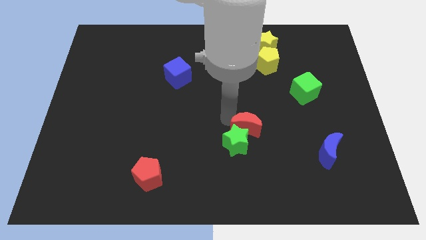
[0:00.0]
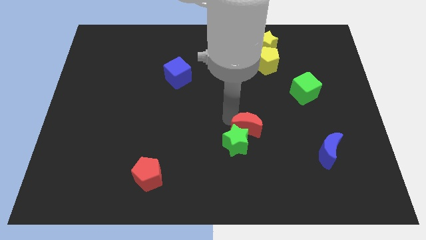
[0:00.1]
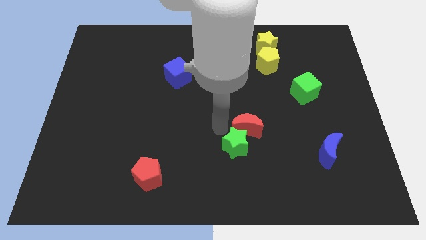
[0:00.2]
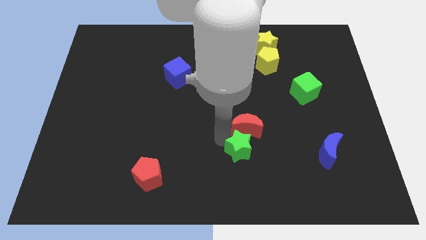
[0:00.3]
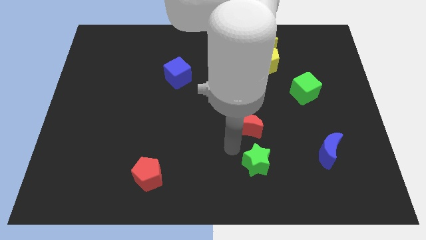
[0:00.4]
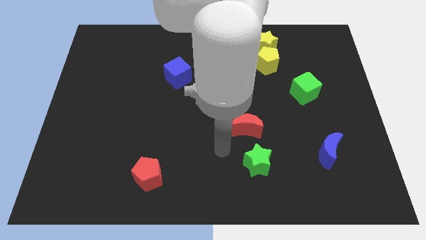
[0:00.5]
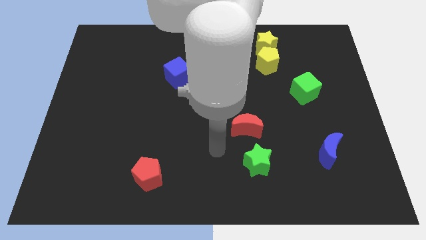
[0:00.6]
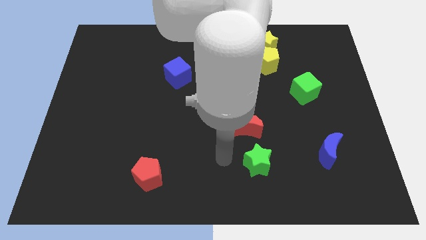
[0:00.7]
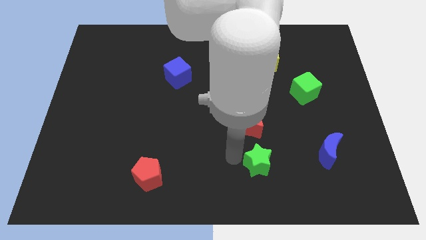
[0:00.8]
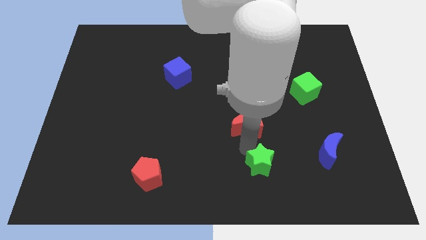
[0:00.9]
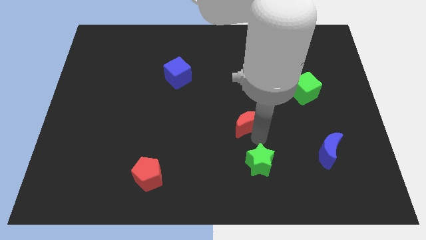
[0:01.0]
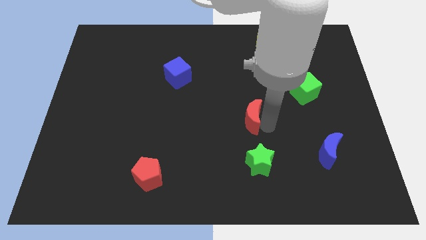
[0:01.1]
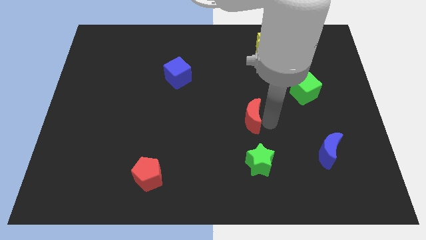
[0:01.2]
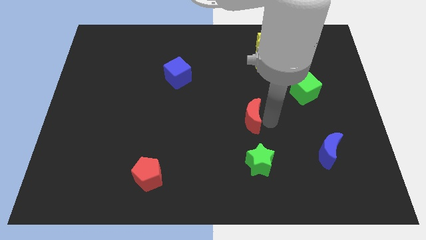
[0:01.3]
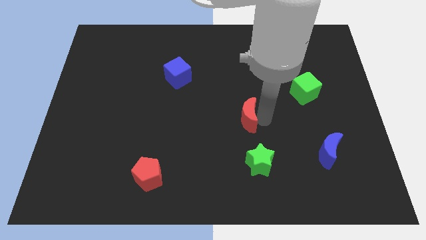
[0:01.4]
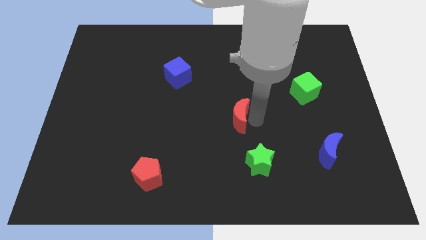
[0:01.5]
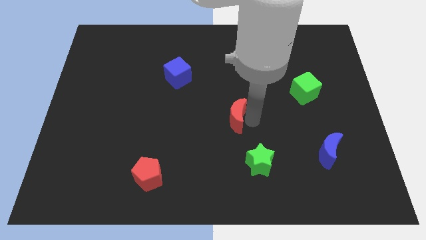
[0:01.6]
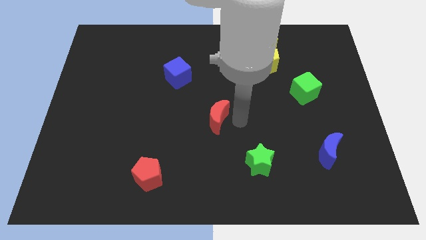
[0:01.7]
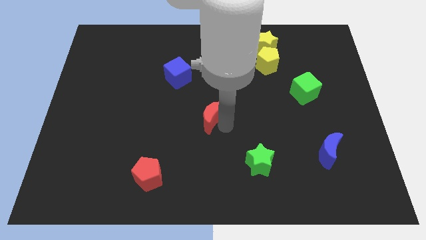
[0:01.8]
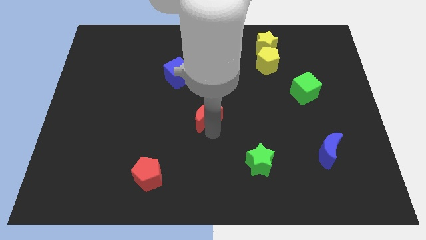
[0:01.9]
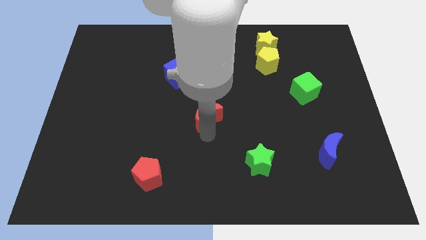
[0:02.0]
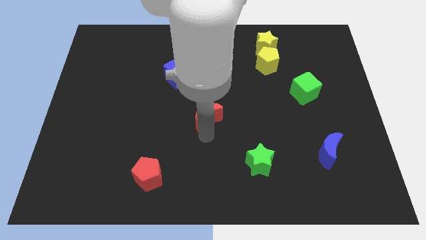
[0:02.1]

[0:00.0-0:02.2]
move red moon slightly left

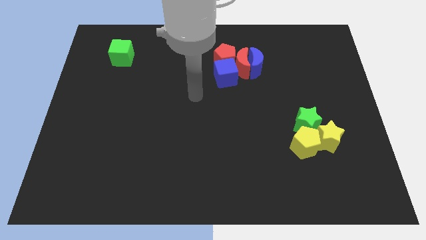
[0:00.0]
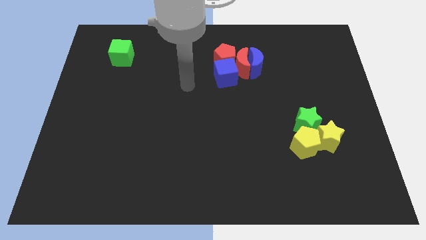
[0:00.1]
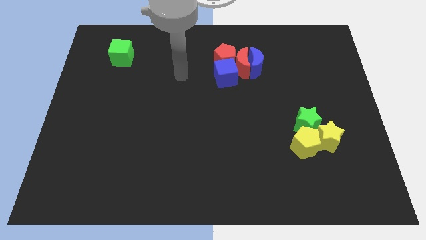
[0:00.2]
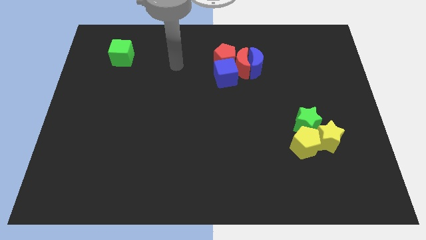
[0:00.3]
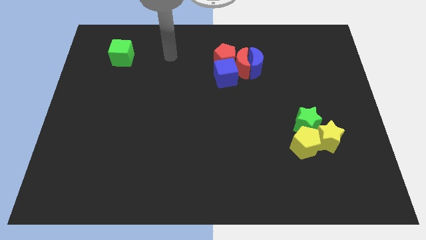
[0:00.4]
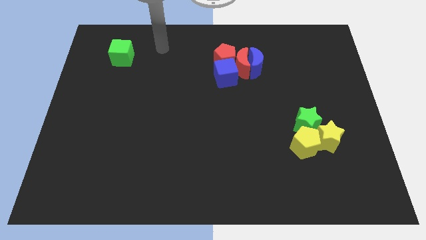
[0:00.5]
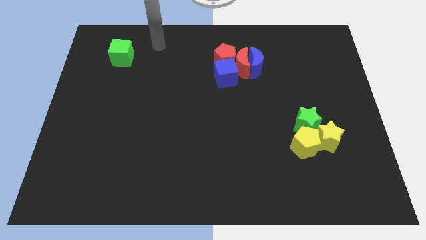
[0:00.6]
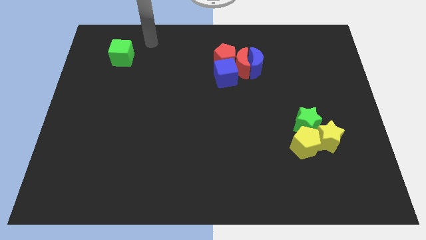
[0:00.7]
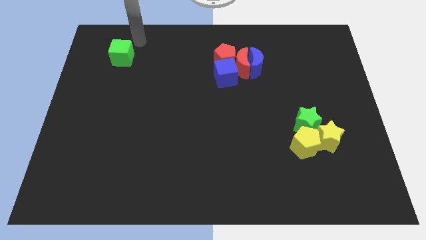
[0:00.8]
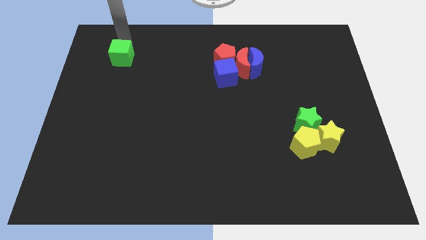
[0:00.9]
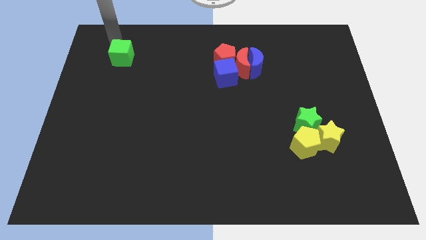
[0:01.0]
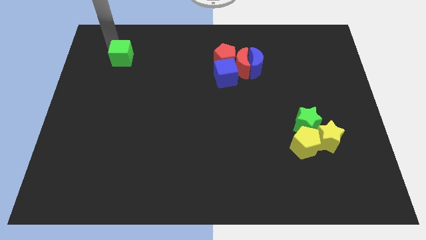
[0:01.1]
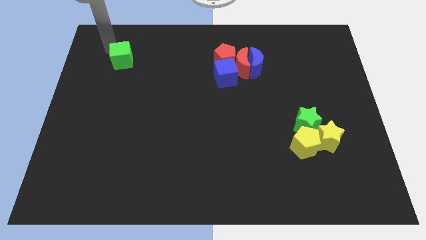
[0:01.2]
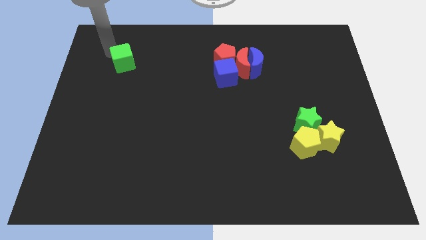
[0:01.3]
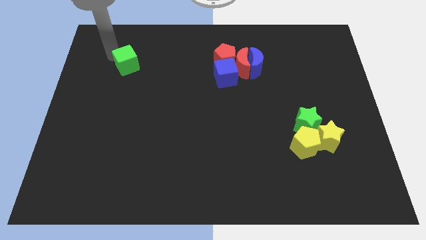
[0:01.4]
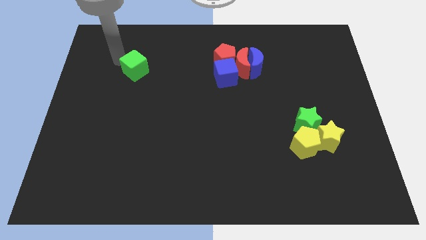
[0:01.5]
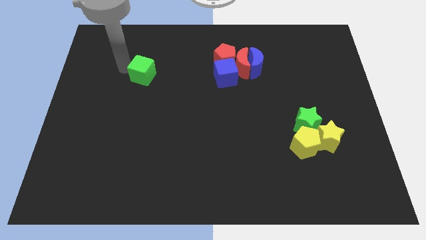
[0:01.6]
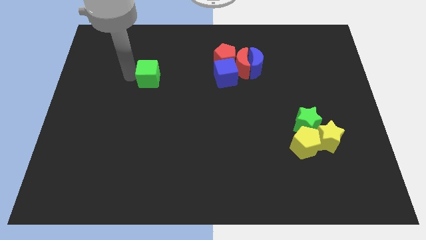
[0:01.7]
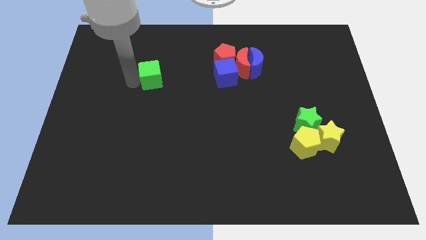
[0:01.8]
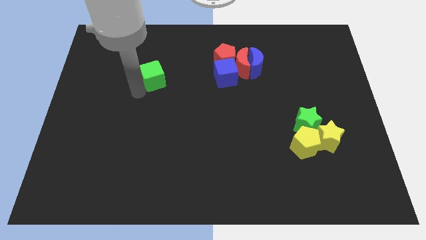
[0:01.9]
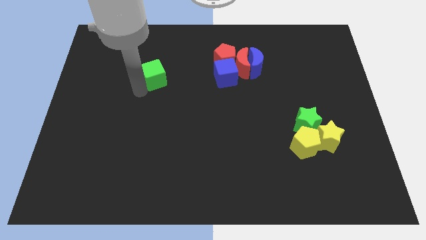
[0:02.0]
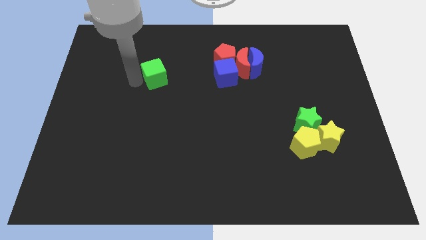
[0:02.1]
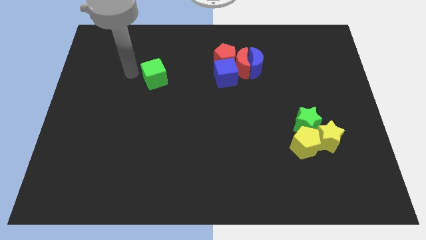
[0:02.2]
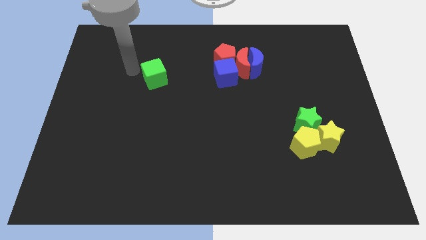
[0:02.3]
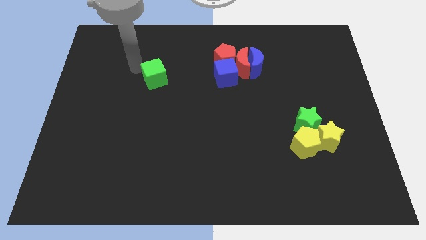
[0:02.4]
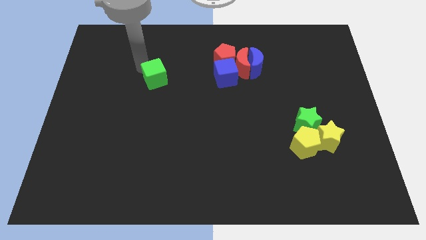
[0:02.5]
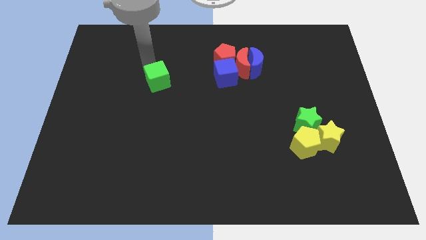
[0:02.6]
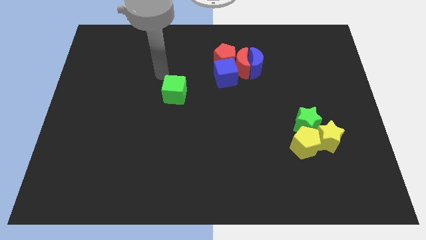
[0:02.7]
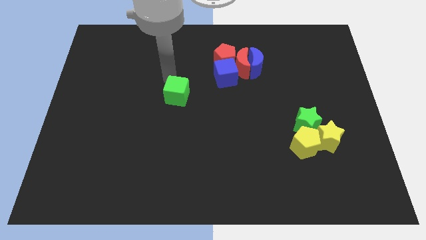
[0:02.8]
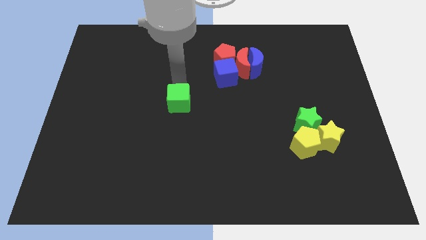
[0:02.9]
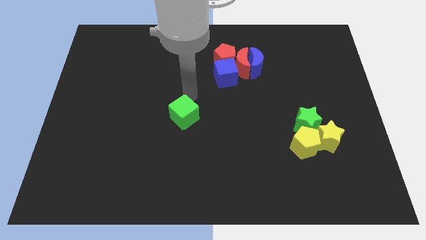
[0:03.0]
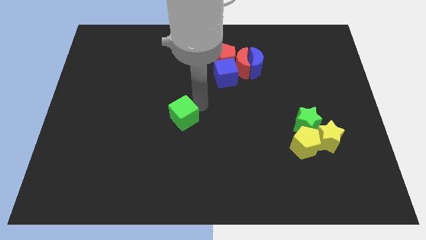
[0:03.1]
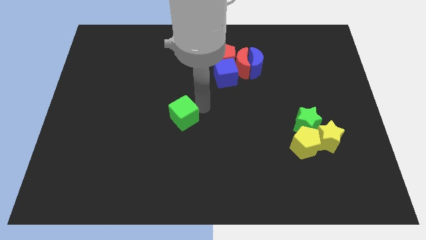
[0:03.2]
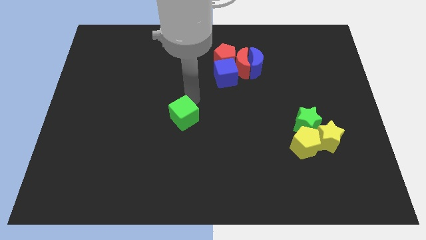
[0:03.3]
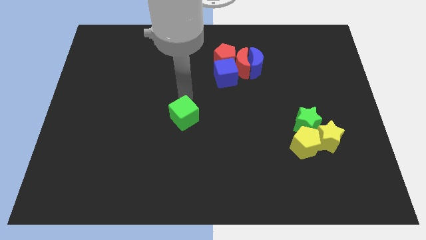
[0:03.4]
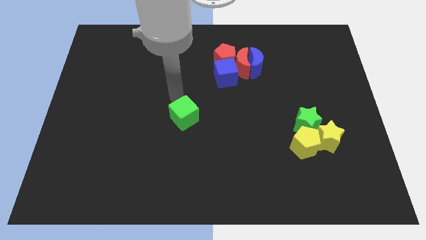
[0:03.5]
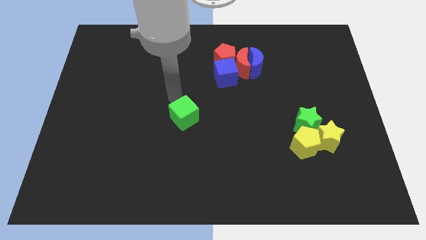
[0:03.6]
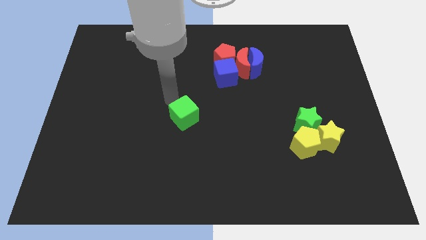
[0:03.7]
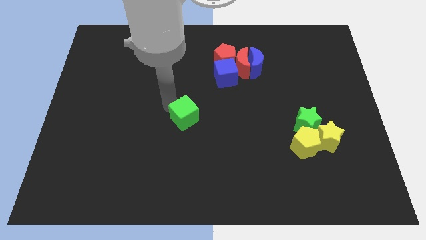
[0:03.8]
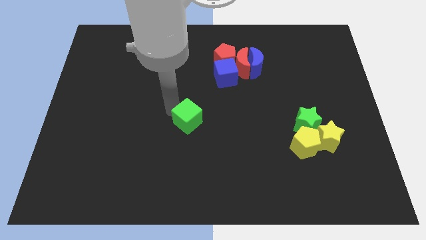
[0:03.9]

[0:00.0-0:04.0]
push green cube to center of the board

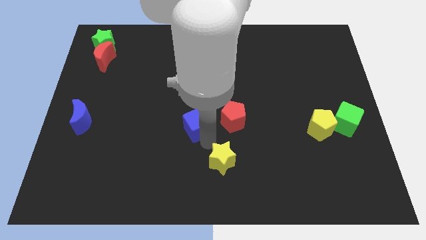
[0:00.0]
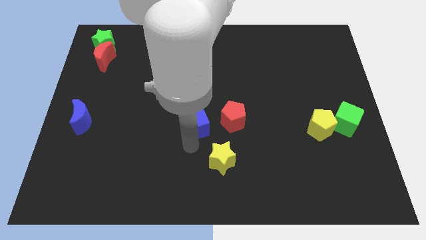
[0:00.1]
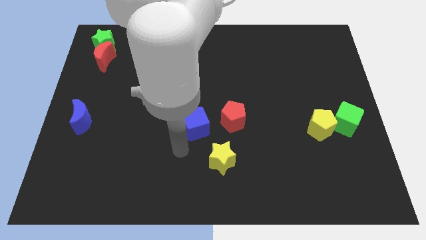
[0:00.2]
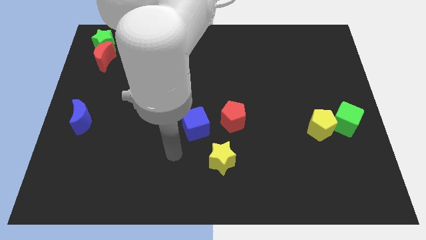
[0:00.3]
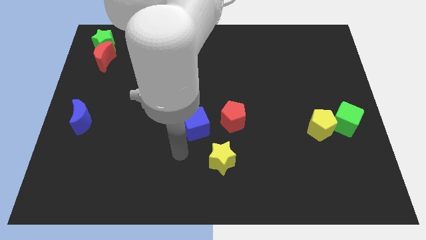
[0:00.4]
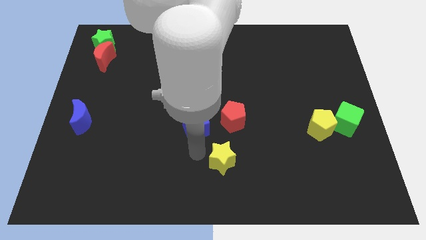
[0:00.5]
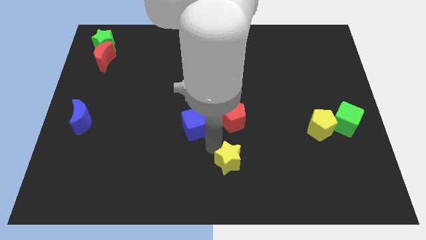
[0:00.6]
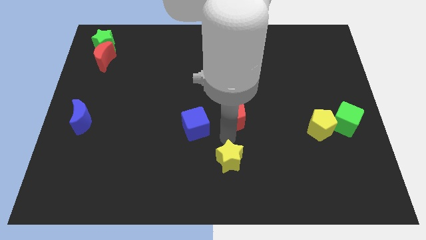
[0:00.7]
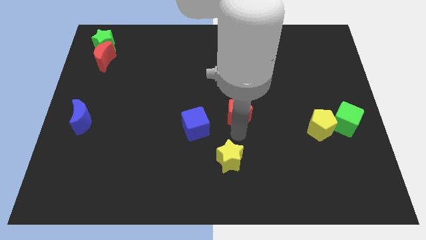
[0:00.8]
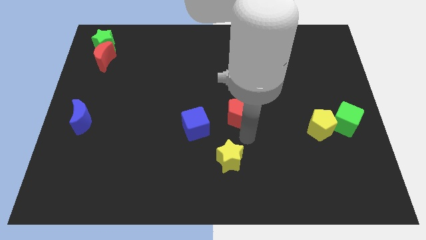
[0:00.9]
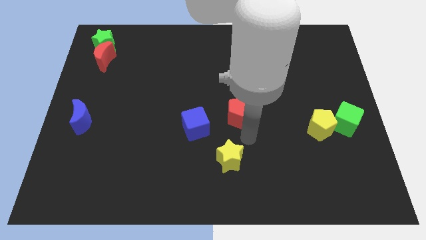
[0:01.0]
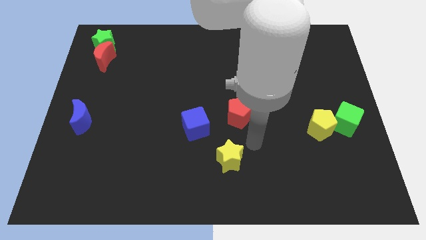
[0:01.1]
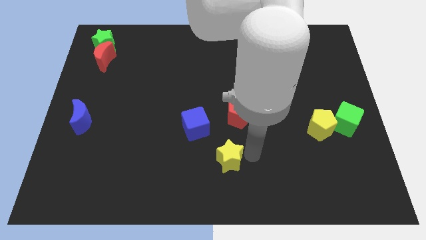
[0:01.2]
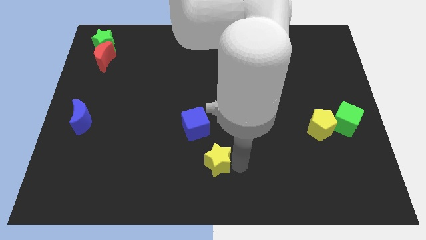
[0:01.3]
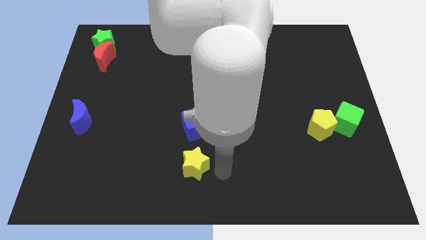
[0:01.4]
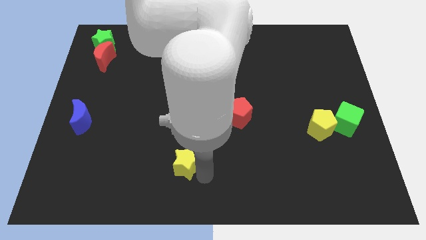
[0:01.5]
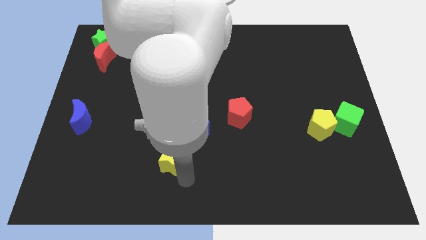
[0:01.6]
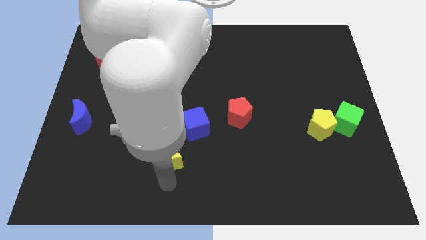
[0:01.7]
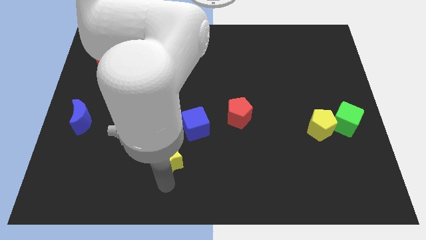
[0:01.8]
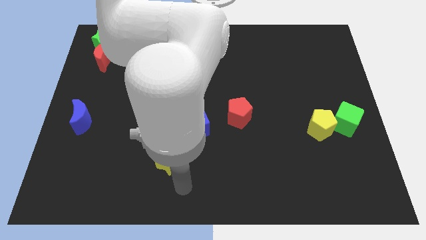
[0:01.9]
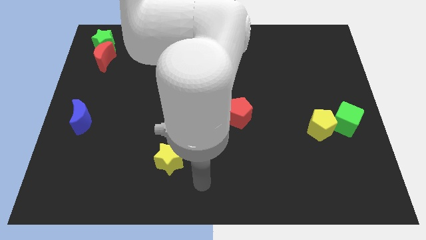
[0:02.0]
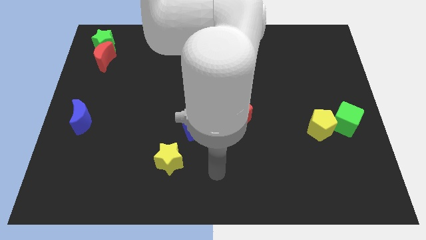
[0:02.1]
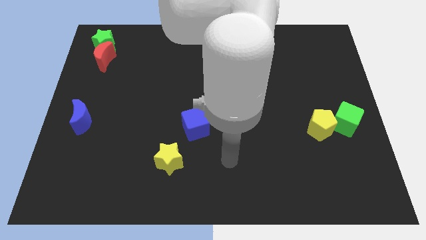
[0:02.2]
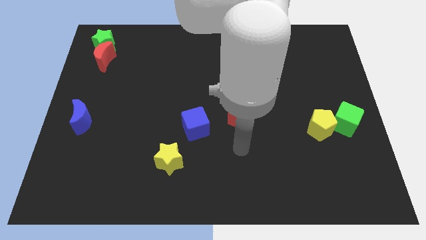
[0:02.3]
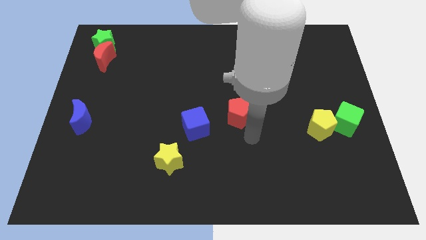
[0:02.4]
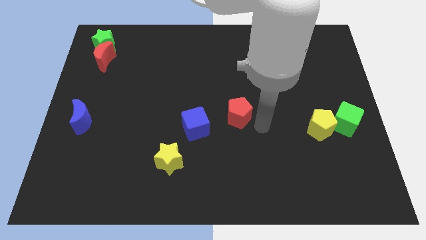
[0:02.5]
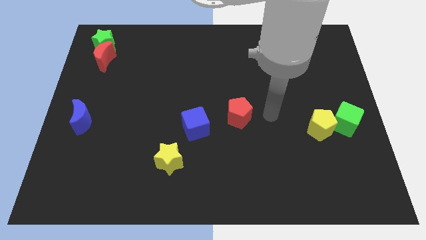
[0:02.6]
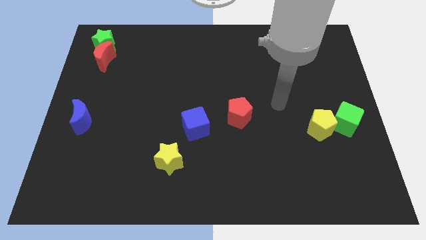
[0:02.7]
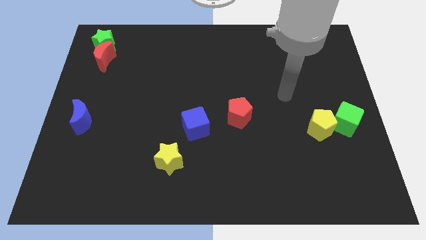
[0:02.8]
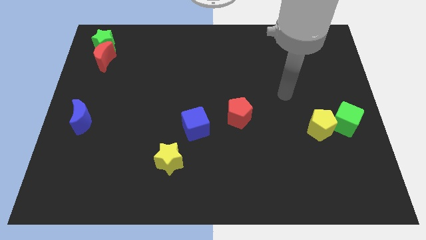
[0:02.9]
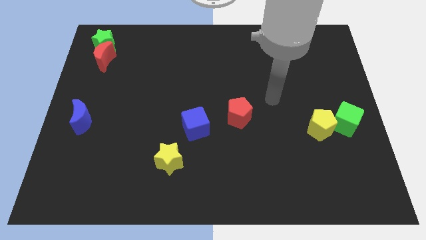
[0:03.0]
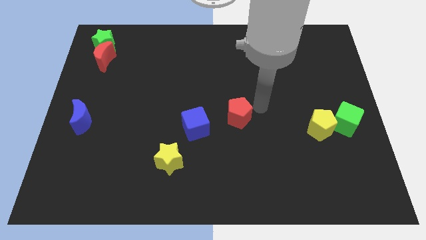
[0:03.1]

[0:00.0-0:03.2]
move the yellow star away from the bottom side of red pentagon and blue cube
